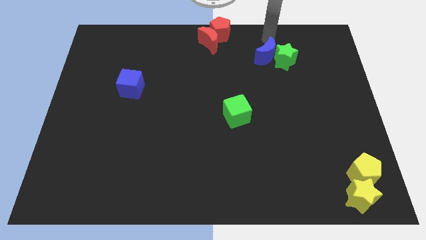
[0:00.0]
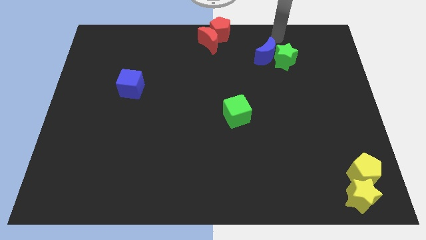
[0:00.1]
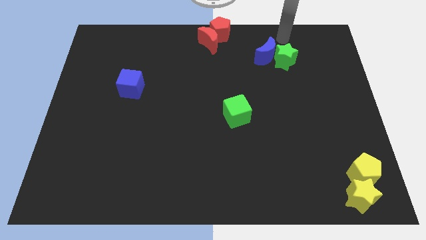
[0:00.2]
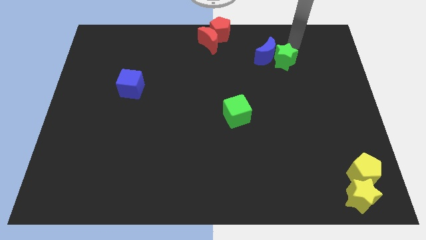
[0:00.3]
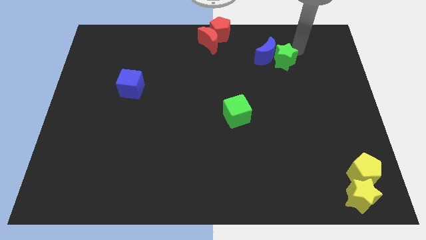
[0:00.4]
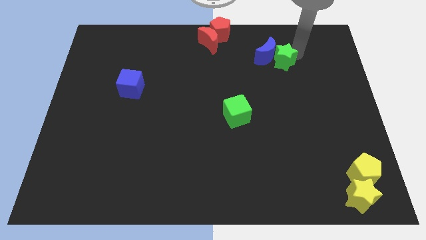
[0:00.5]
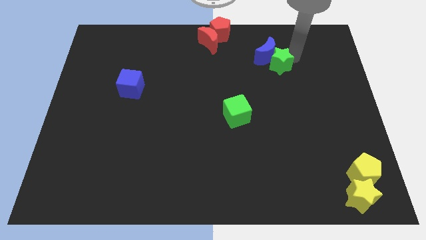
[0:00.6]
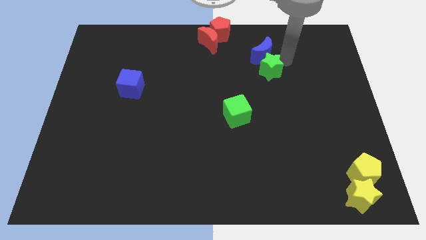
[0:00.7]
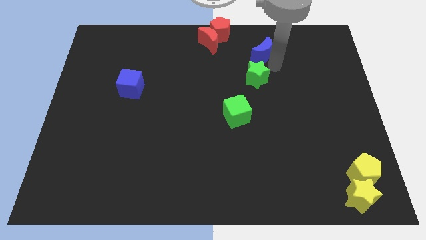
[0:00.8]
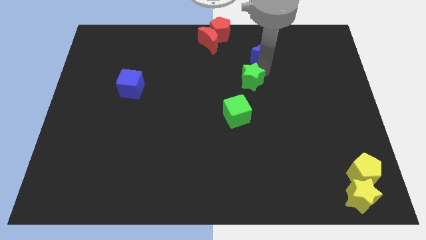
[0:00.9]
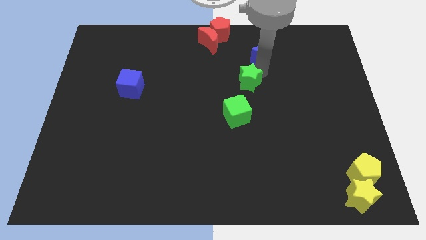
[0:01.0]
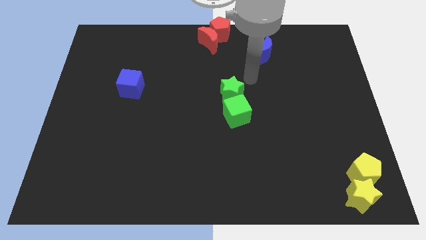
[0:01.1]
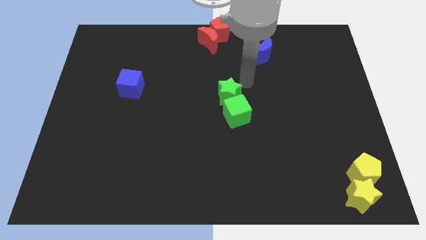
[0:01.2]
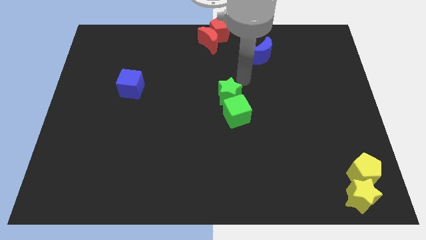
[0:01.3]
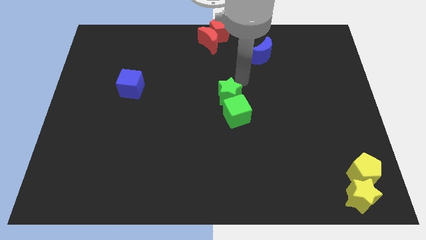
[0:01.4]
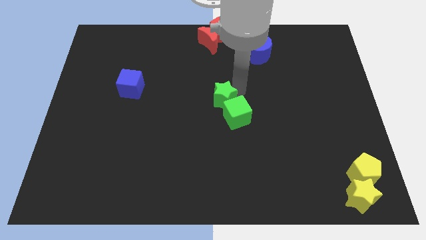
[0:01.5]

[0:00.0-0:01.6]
place the green star on top of green cube

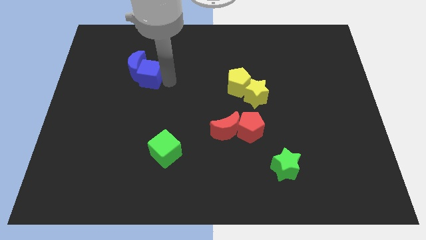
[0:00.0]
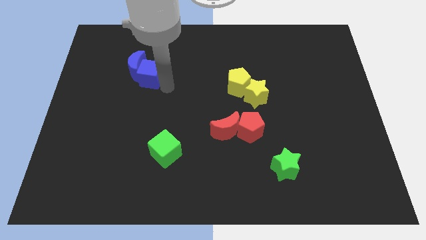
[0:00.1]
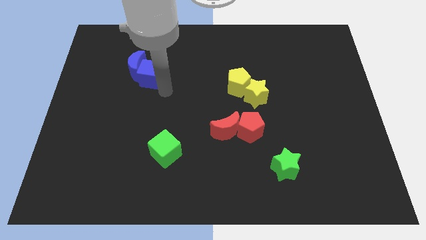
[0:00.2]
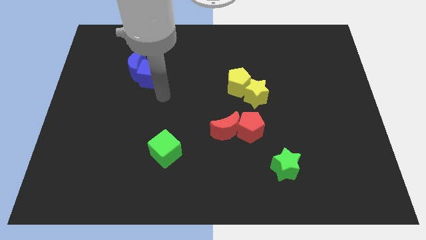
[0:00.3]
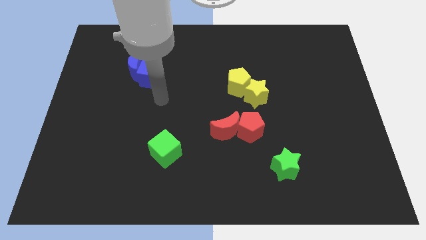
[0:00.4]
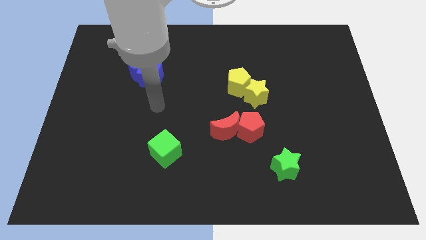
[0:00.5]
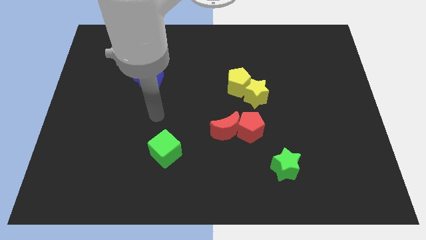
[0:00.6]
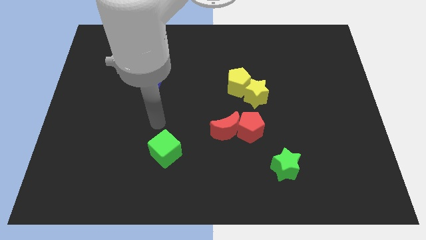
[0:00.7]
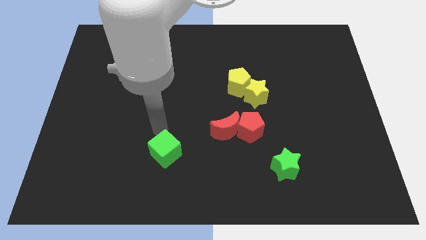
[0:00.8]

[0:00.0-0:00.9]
point your arm at the top of green cube

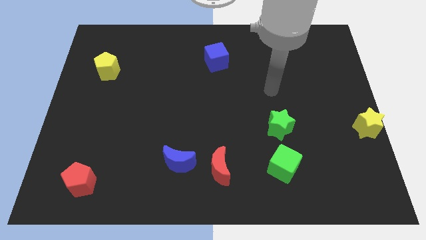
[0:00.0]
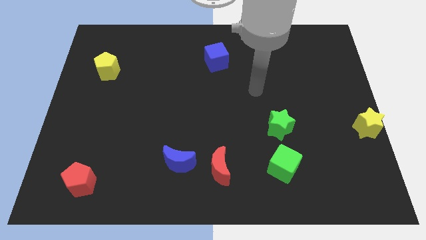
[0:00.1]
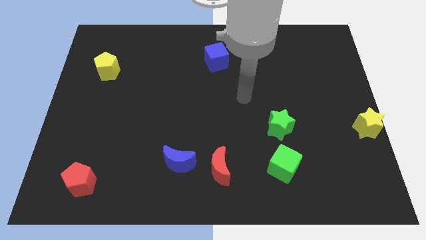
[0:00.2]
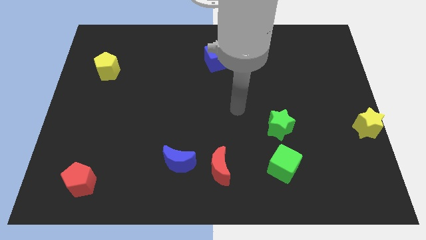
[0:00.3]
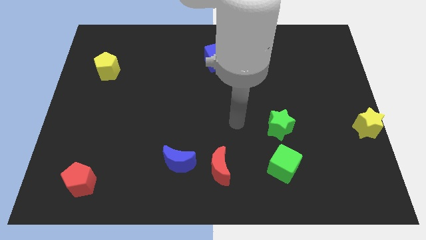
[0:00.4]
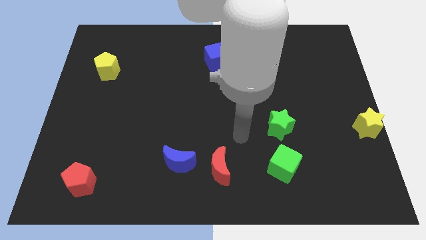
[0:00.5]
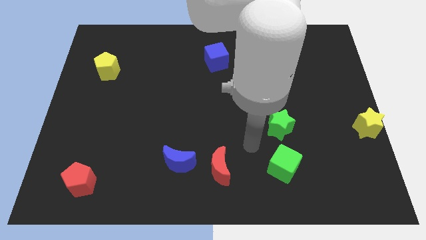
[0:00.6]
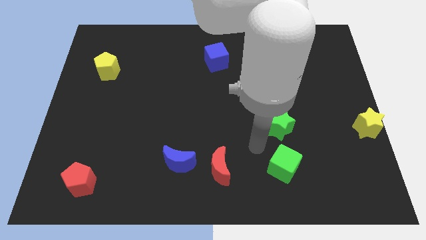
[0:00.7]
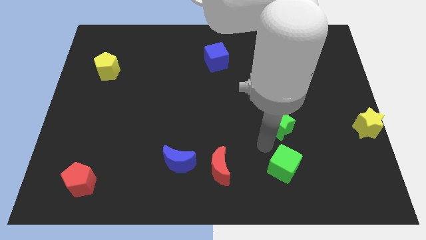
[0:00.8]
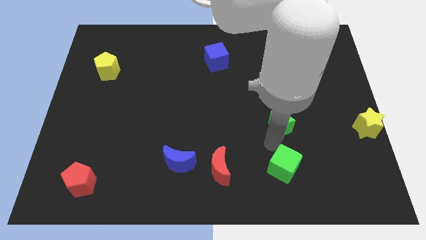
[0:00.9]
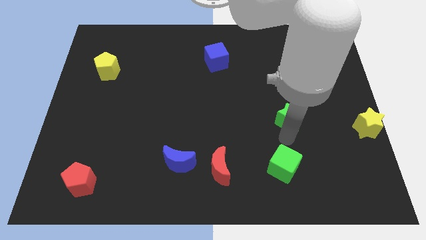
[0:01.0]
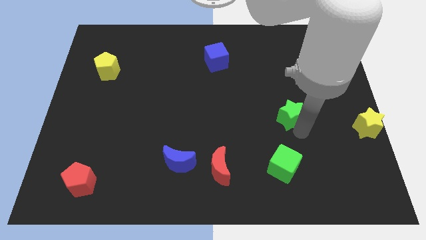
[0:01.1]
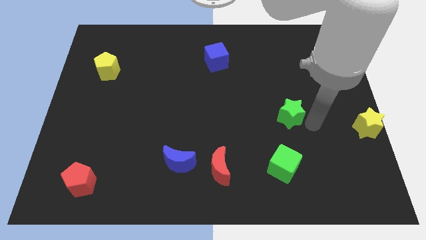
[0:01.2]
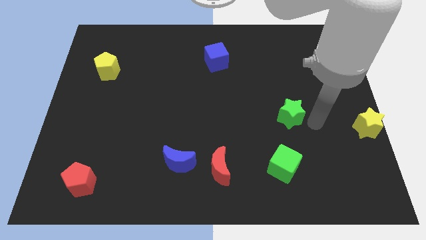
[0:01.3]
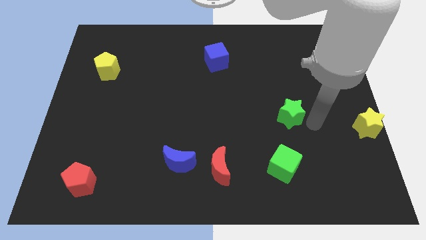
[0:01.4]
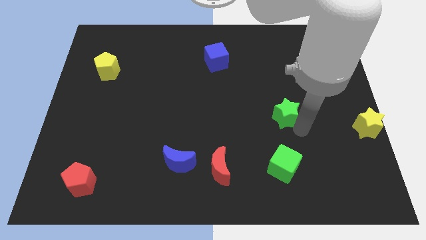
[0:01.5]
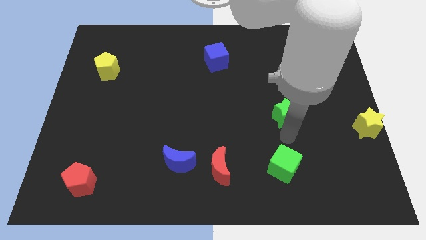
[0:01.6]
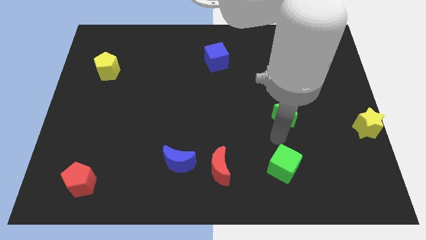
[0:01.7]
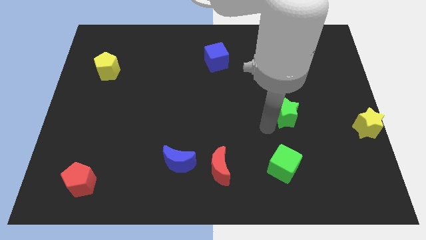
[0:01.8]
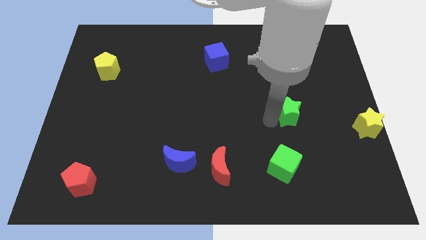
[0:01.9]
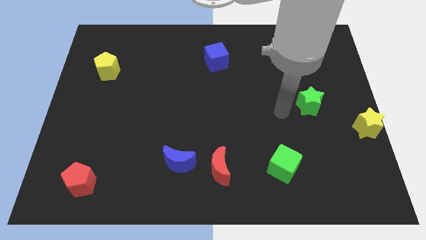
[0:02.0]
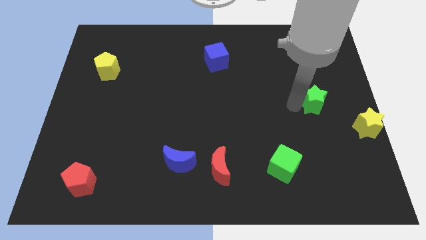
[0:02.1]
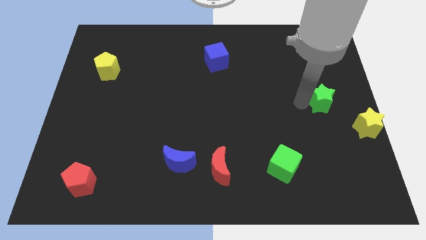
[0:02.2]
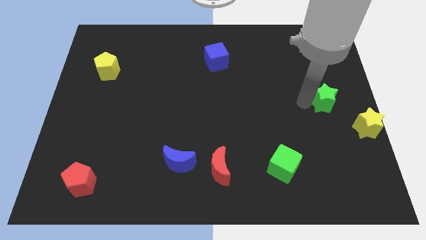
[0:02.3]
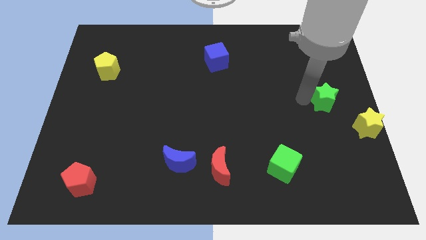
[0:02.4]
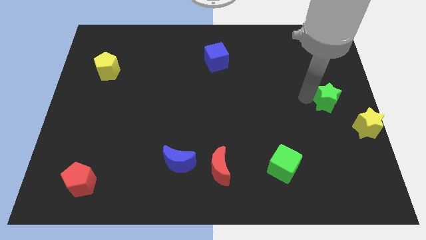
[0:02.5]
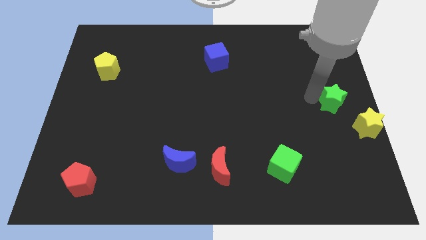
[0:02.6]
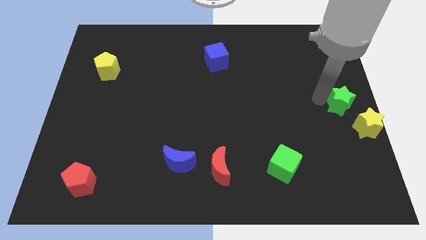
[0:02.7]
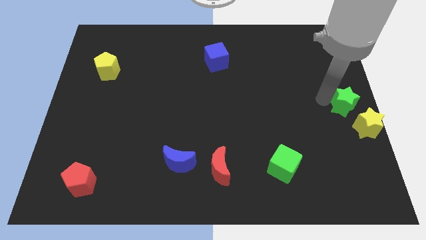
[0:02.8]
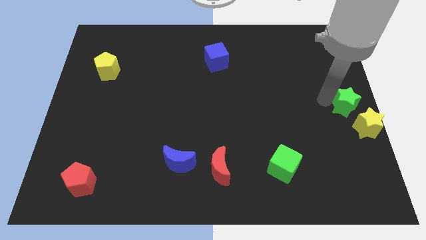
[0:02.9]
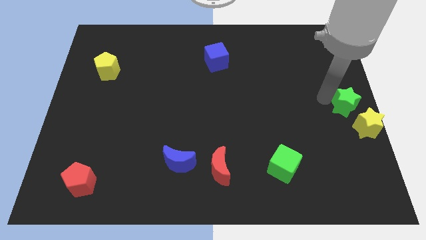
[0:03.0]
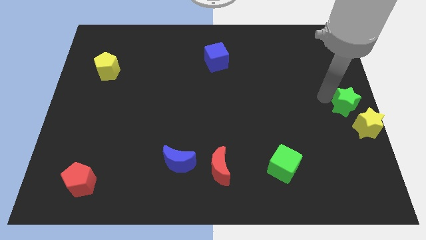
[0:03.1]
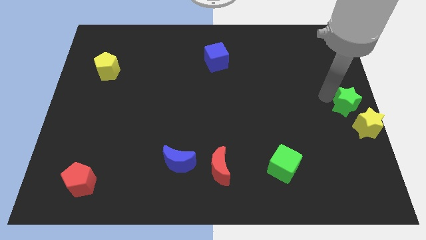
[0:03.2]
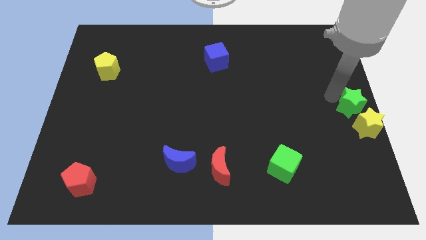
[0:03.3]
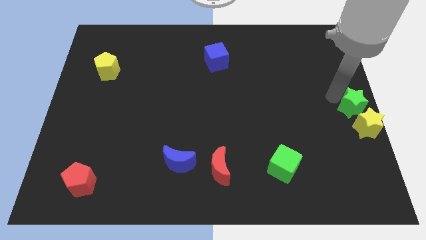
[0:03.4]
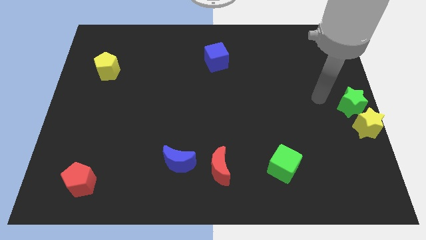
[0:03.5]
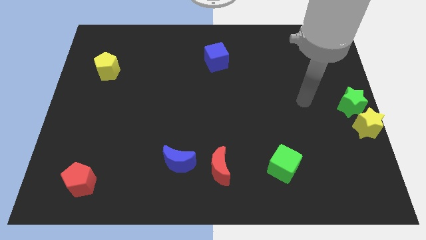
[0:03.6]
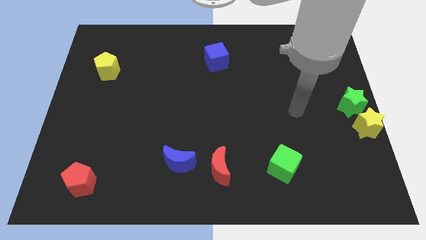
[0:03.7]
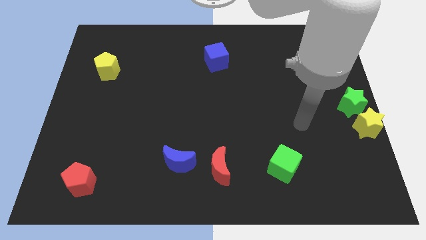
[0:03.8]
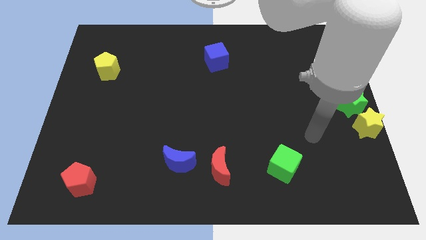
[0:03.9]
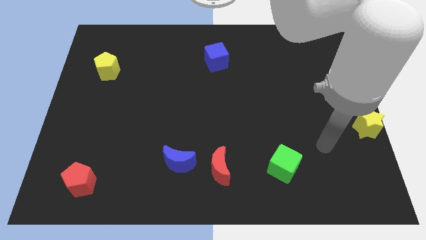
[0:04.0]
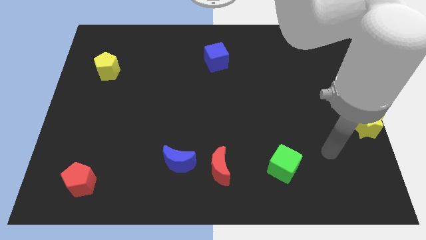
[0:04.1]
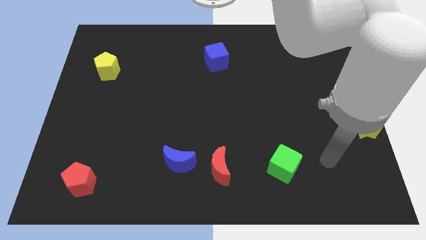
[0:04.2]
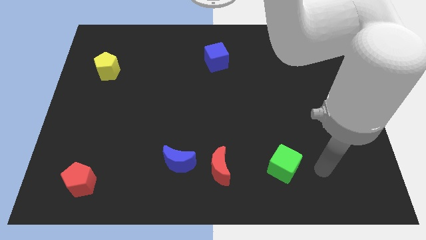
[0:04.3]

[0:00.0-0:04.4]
move the green star to the right center of the board

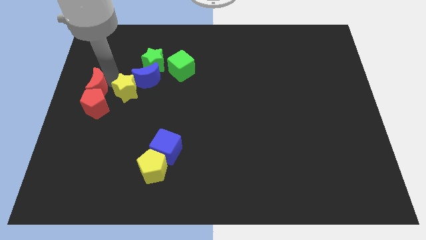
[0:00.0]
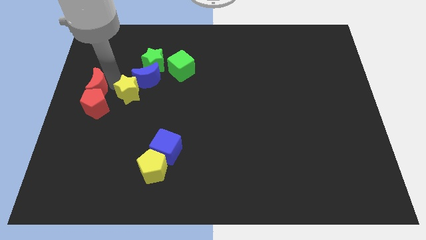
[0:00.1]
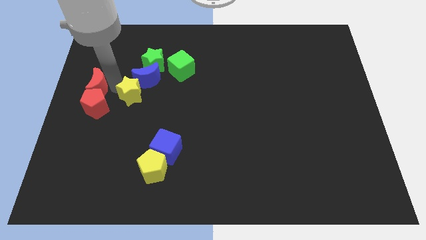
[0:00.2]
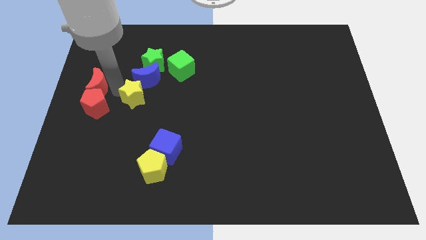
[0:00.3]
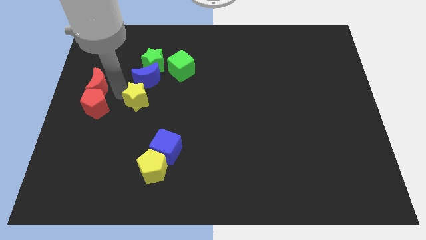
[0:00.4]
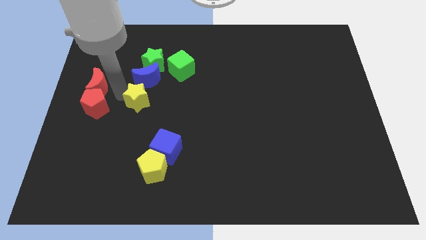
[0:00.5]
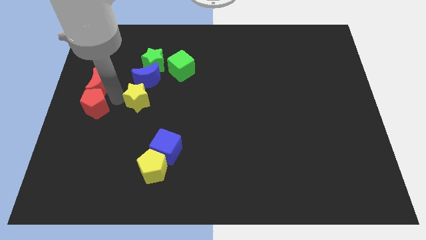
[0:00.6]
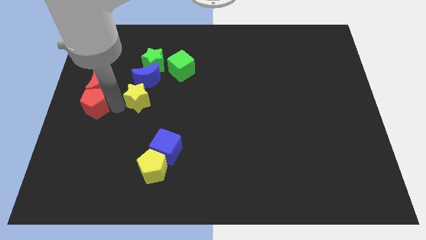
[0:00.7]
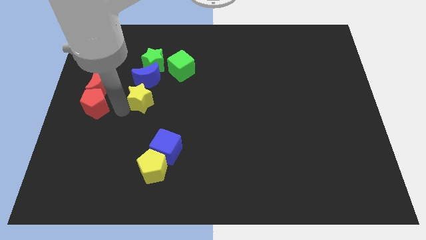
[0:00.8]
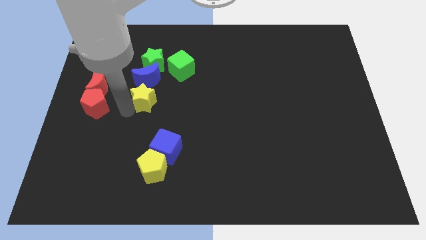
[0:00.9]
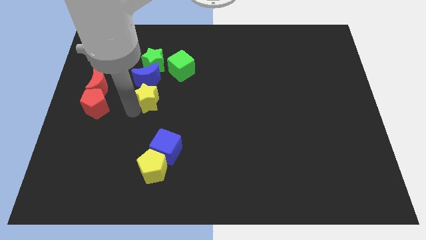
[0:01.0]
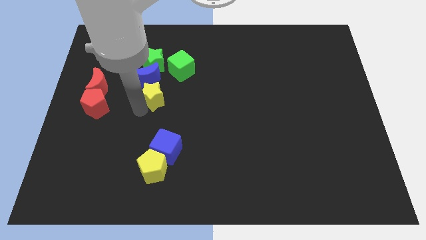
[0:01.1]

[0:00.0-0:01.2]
place the yellow star below the blue moon

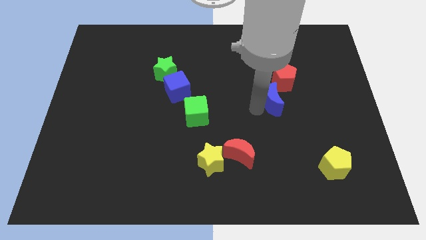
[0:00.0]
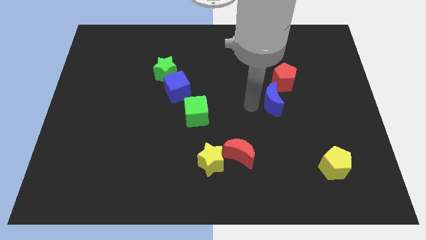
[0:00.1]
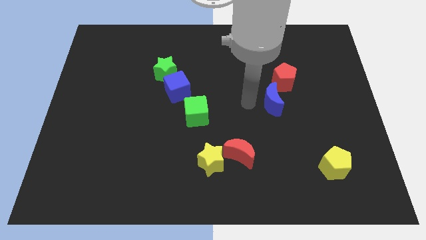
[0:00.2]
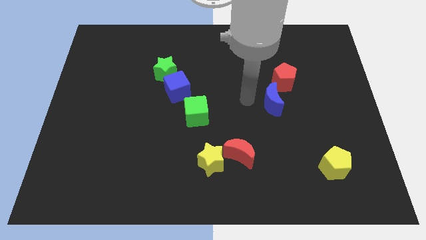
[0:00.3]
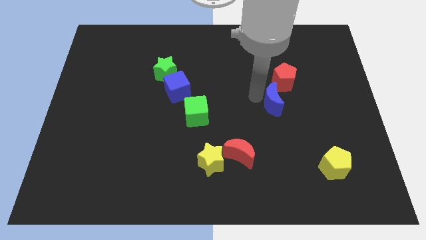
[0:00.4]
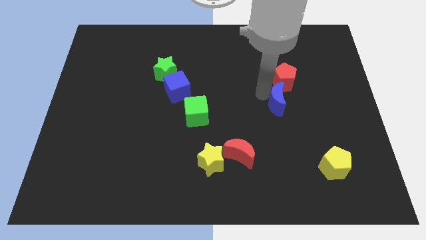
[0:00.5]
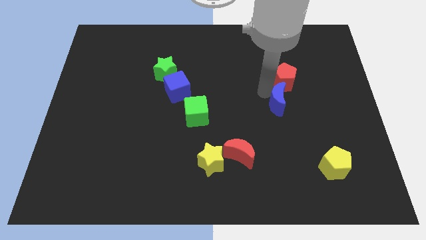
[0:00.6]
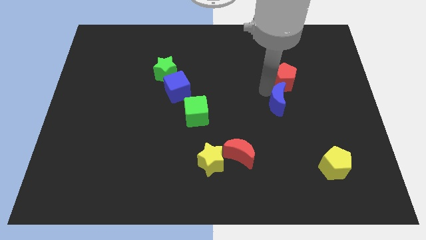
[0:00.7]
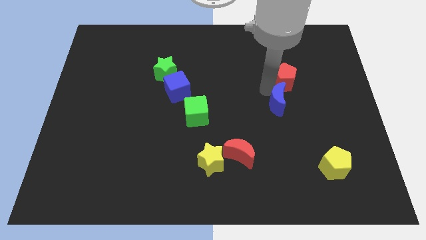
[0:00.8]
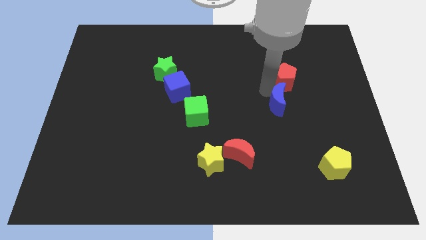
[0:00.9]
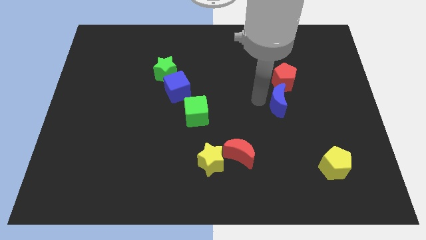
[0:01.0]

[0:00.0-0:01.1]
put blue moon and red pentagon together
